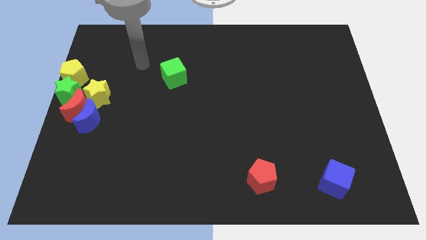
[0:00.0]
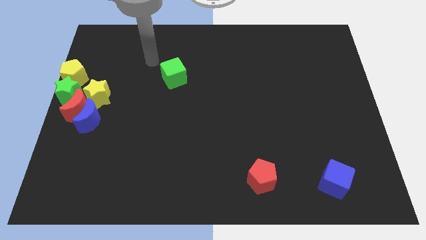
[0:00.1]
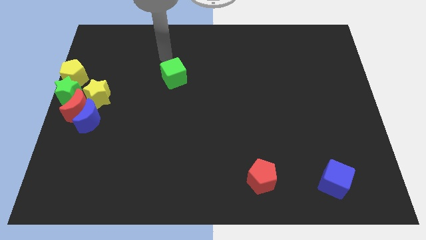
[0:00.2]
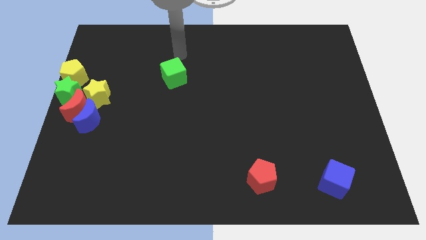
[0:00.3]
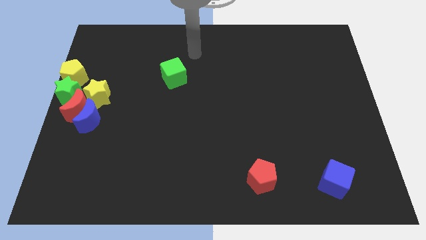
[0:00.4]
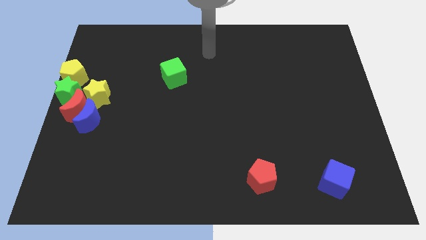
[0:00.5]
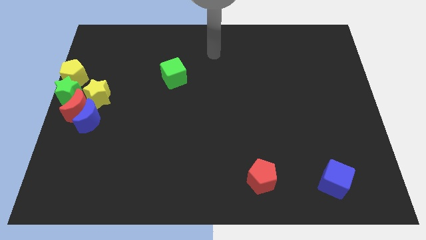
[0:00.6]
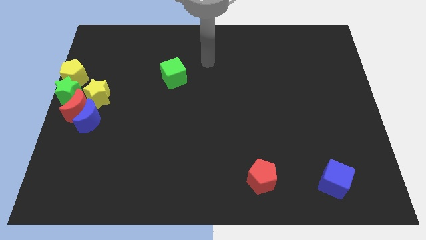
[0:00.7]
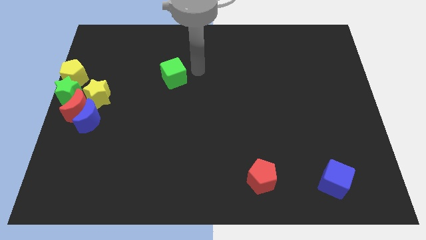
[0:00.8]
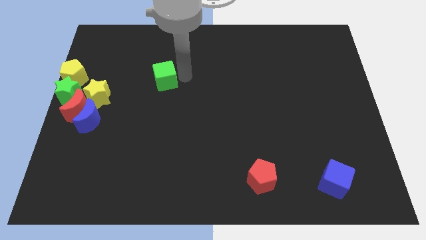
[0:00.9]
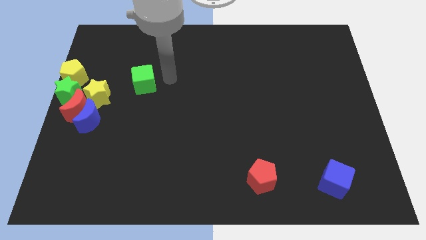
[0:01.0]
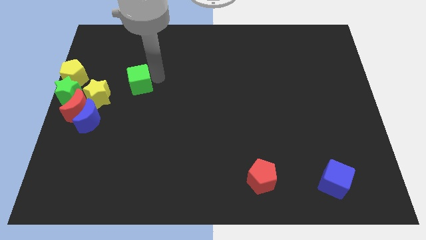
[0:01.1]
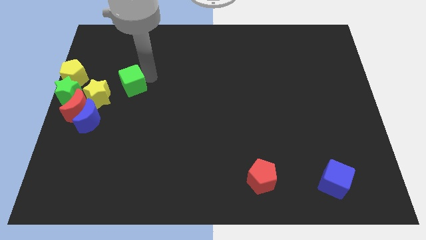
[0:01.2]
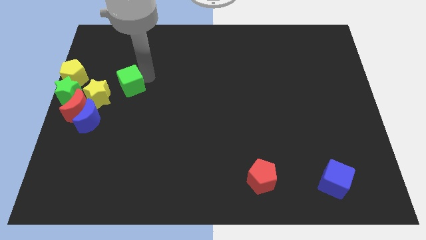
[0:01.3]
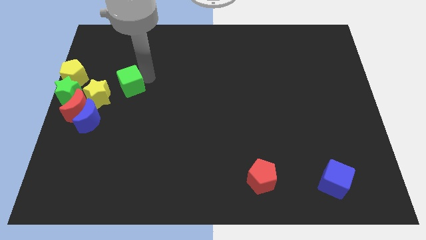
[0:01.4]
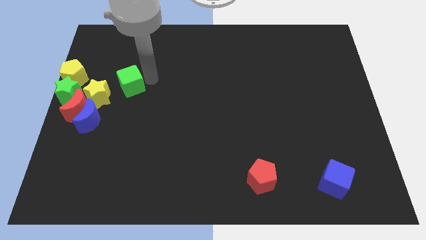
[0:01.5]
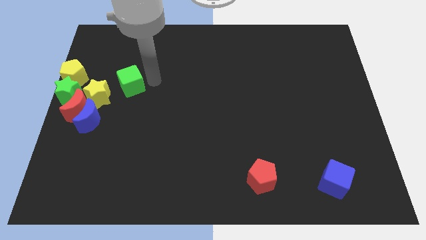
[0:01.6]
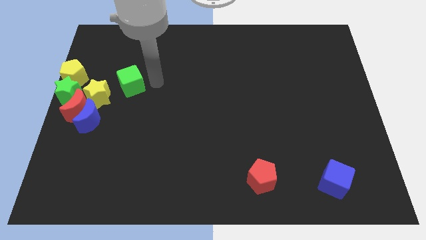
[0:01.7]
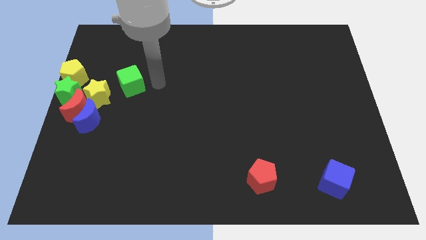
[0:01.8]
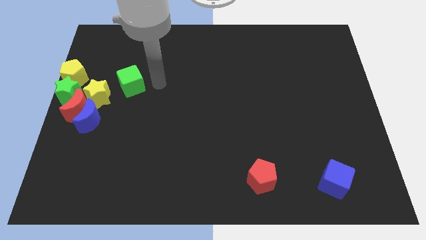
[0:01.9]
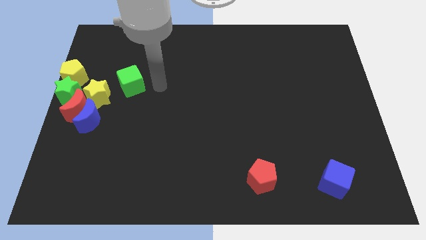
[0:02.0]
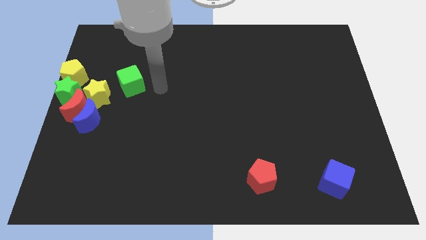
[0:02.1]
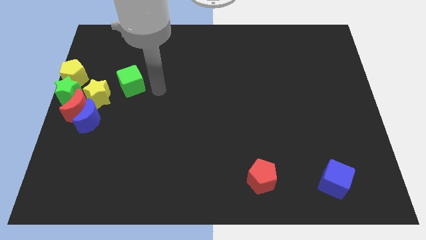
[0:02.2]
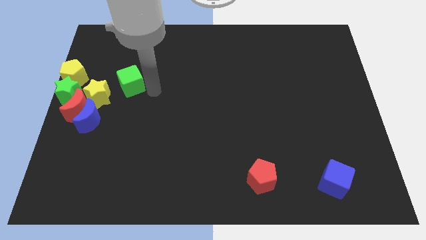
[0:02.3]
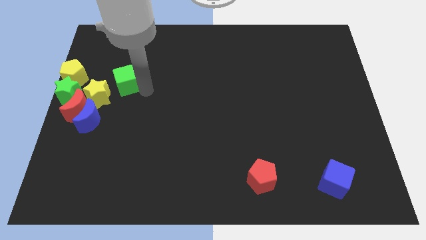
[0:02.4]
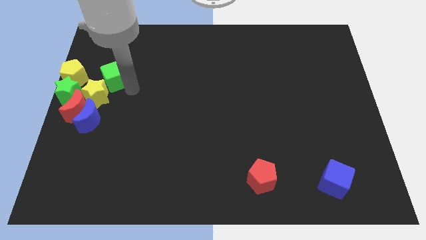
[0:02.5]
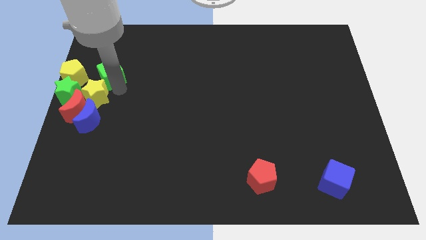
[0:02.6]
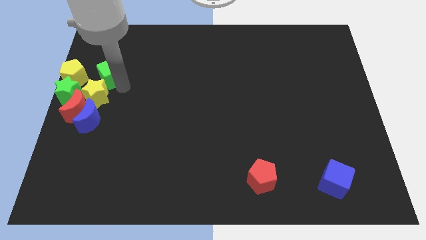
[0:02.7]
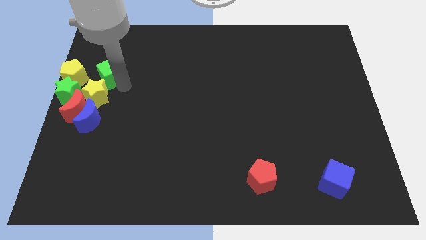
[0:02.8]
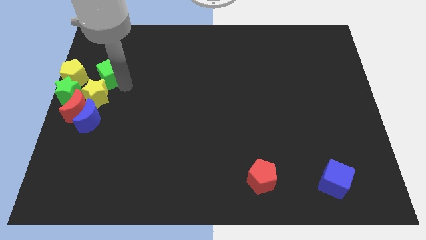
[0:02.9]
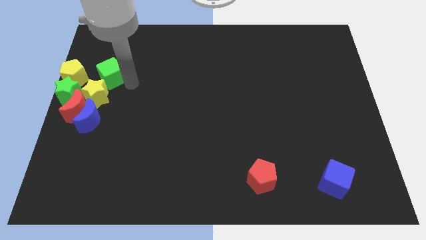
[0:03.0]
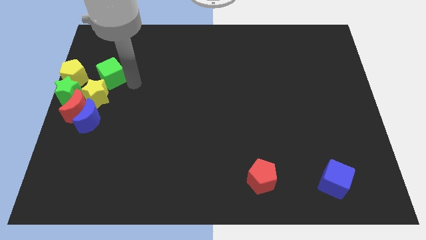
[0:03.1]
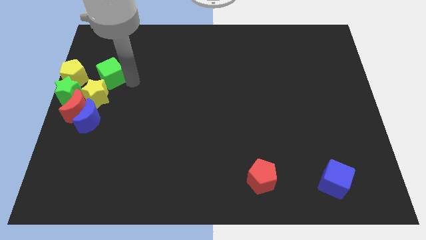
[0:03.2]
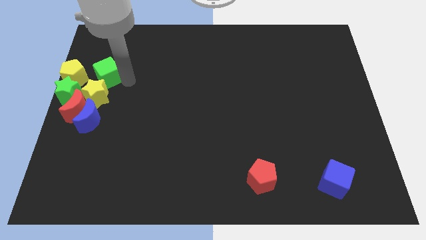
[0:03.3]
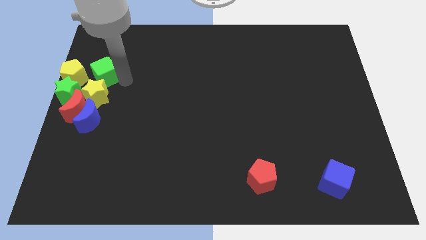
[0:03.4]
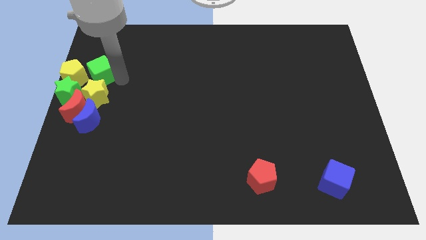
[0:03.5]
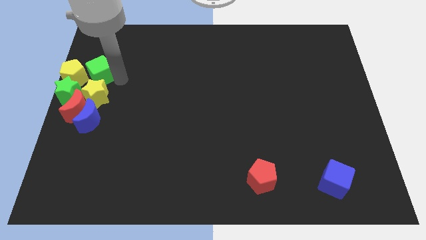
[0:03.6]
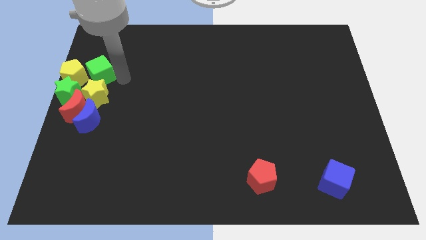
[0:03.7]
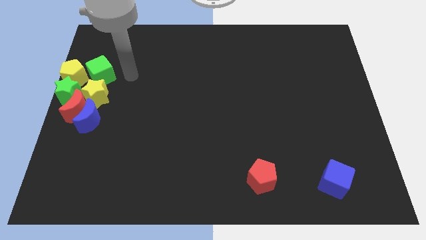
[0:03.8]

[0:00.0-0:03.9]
put green cube adjacent to yellow pentagon

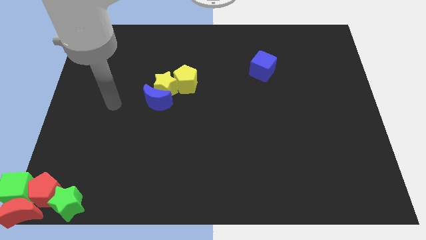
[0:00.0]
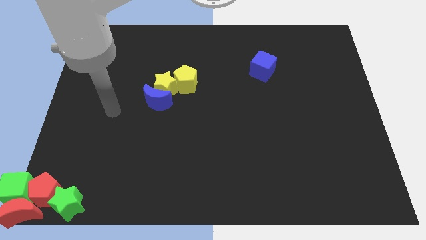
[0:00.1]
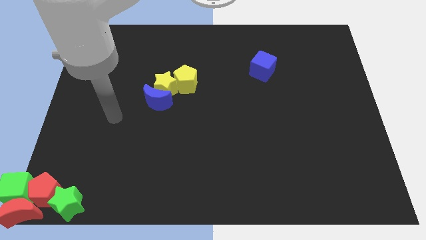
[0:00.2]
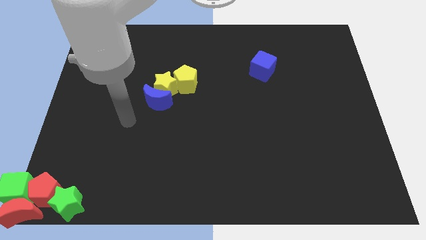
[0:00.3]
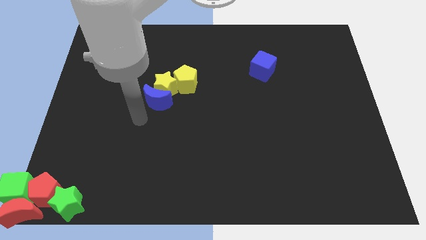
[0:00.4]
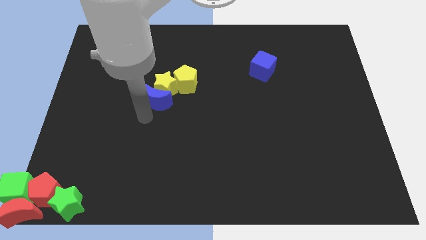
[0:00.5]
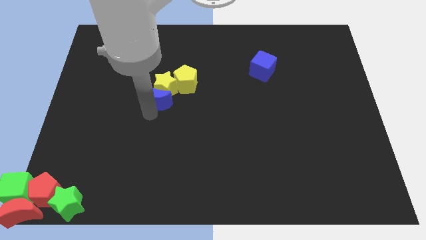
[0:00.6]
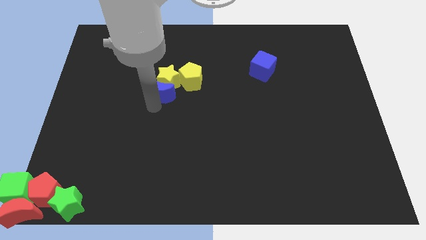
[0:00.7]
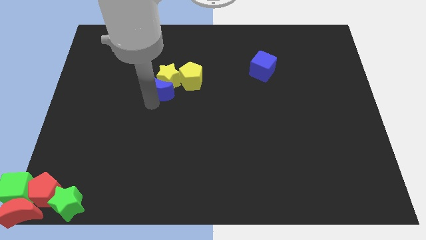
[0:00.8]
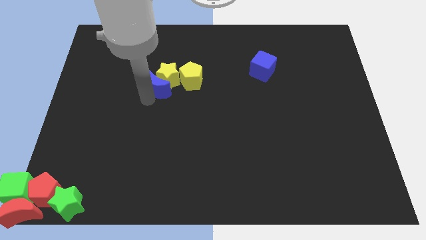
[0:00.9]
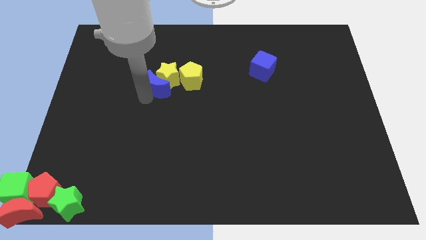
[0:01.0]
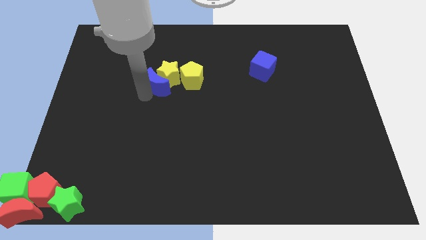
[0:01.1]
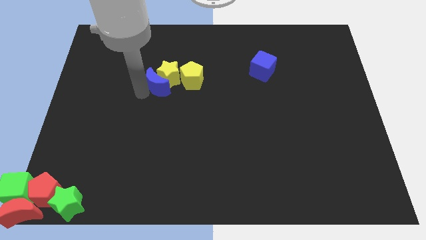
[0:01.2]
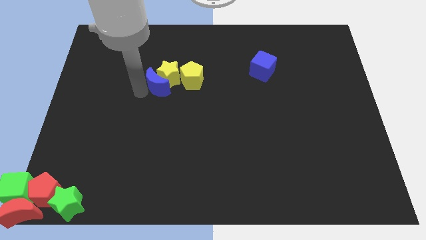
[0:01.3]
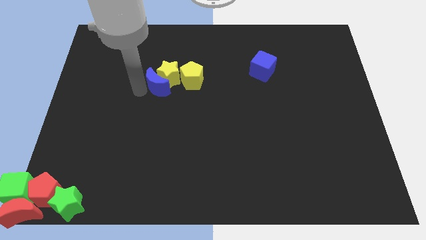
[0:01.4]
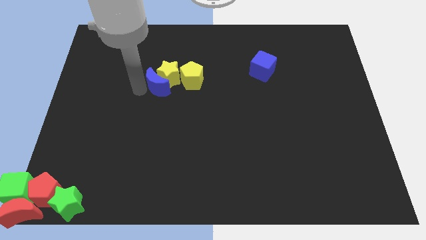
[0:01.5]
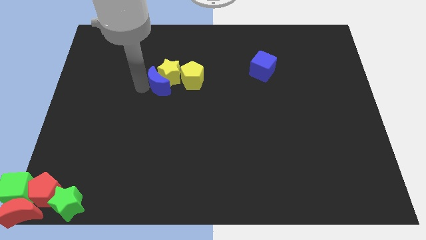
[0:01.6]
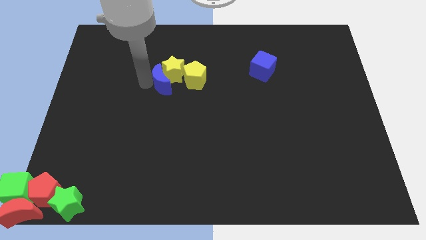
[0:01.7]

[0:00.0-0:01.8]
push the blue crescent along with the yellow star into the yellow pentagon

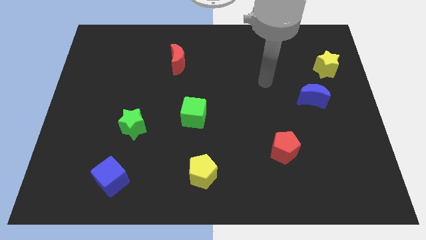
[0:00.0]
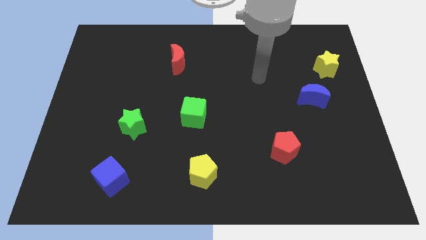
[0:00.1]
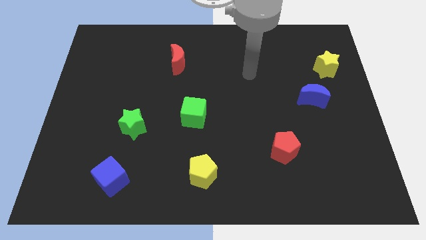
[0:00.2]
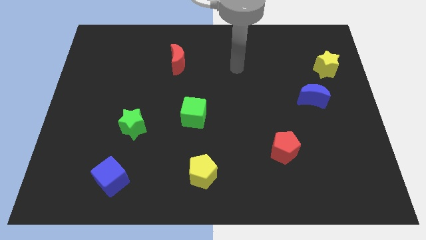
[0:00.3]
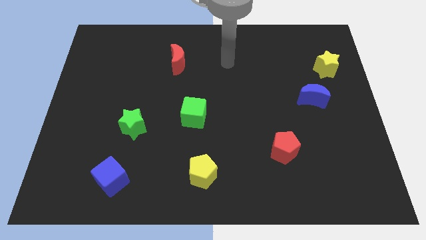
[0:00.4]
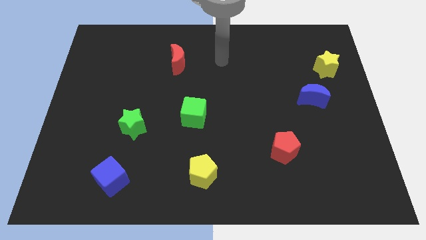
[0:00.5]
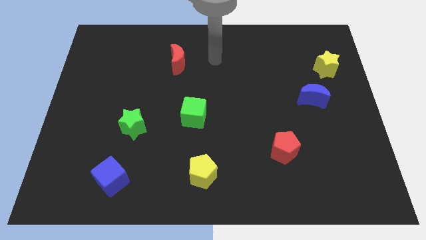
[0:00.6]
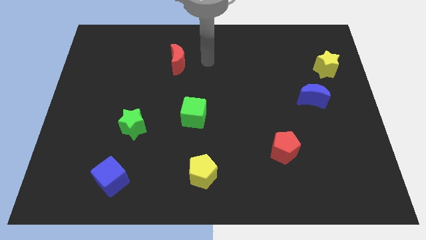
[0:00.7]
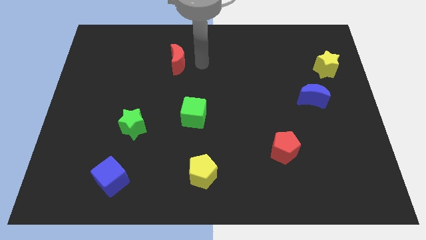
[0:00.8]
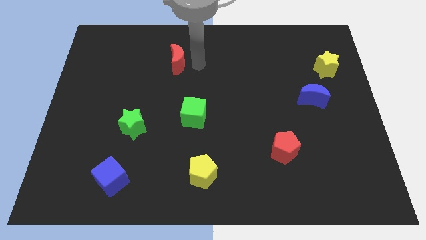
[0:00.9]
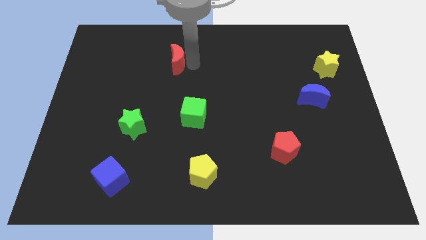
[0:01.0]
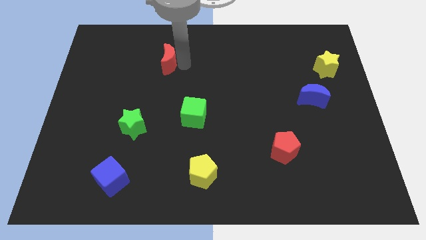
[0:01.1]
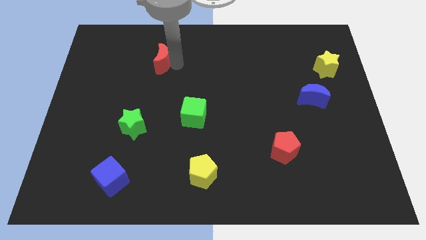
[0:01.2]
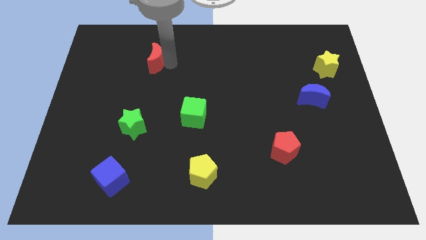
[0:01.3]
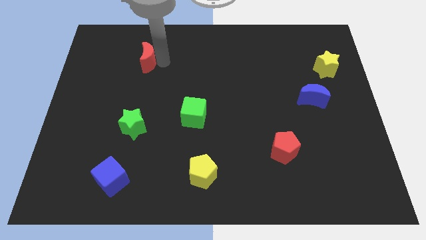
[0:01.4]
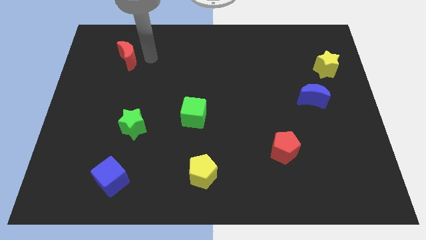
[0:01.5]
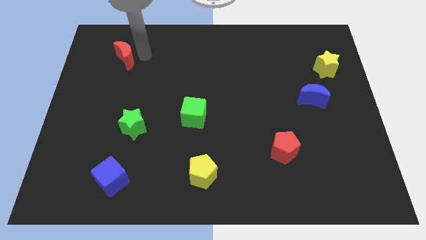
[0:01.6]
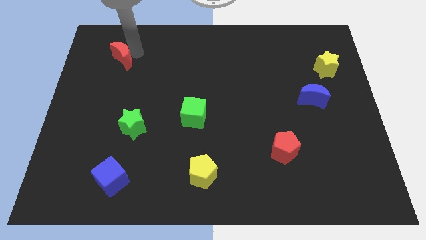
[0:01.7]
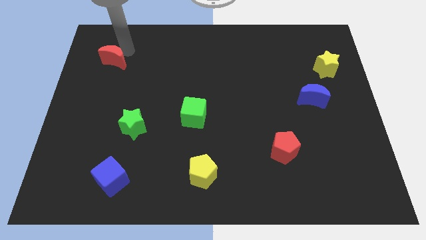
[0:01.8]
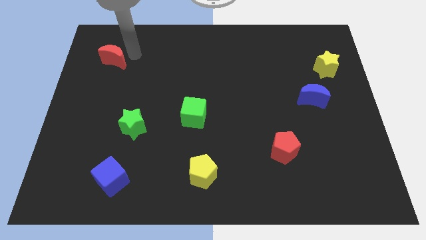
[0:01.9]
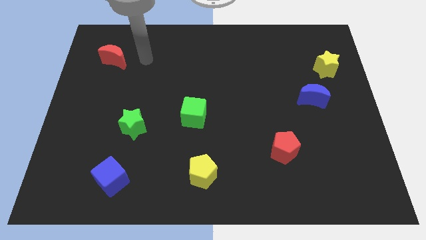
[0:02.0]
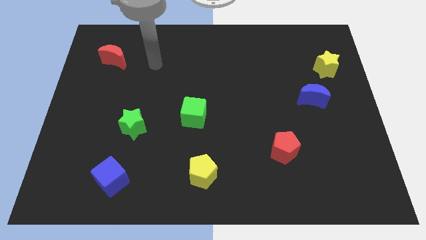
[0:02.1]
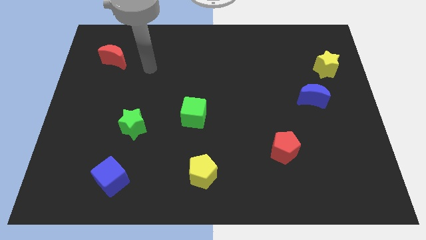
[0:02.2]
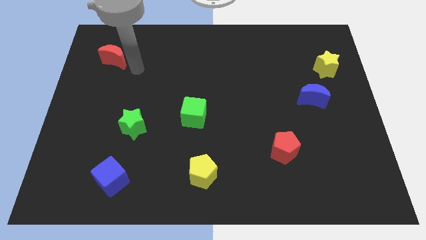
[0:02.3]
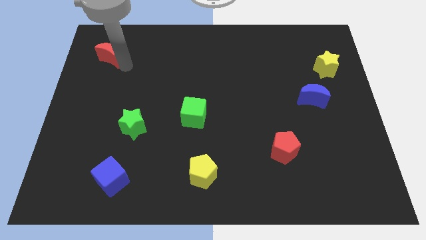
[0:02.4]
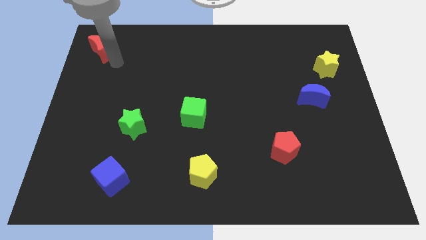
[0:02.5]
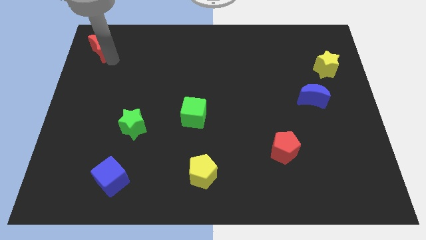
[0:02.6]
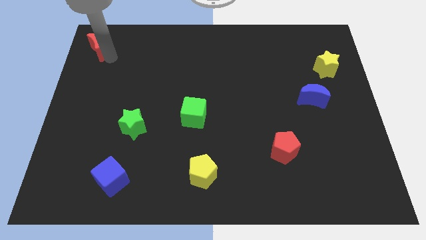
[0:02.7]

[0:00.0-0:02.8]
move the red moon to the top left corner of the board

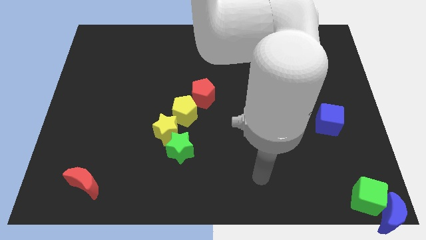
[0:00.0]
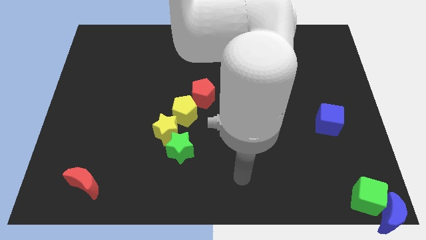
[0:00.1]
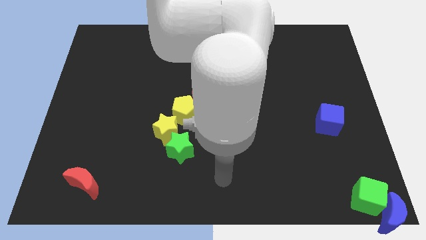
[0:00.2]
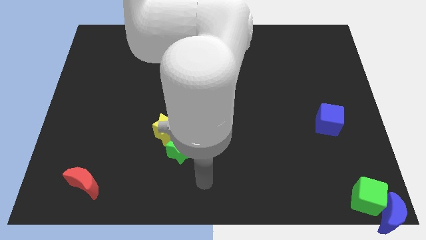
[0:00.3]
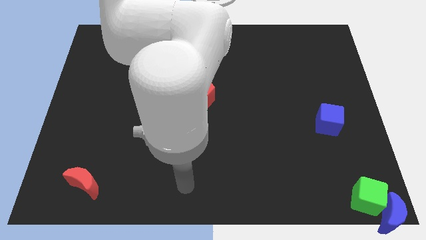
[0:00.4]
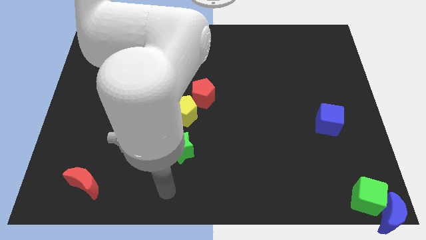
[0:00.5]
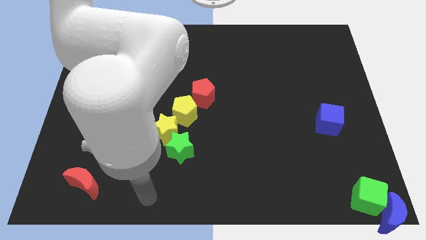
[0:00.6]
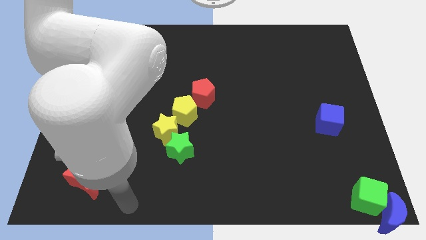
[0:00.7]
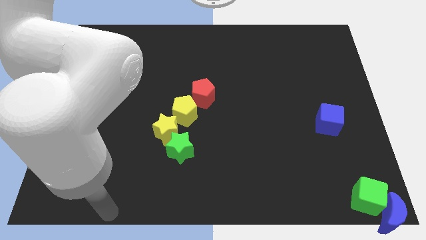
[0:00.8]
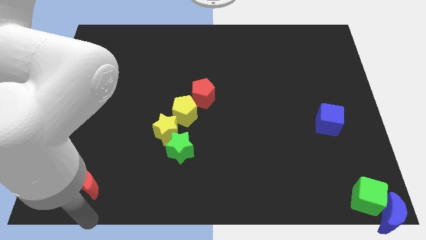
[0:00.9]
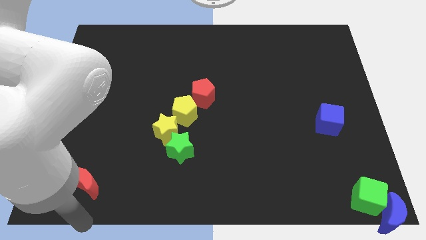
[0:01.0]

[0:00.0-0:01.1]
point your hand at the bottom side of the red crescent
